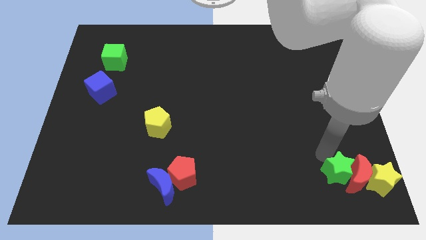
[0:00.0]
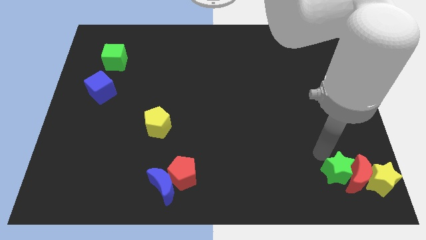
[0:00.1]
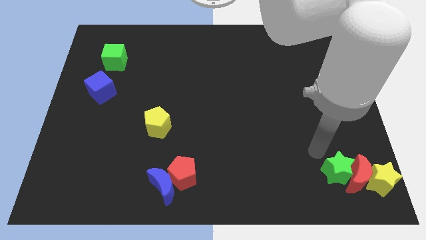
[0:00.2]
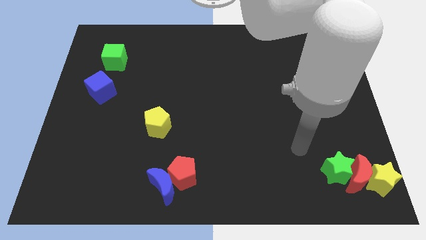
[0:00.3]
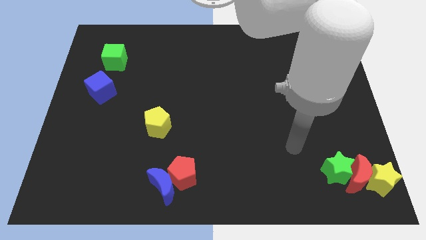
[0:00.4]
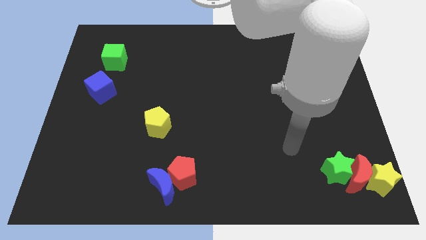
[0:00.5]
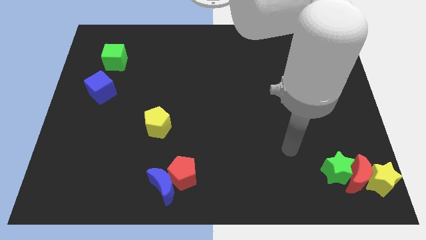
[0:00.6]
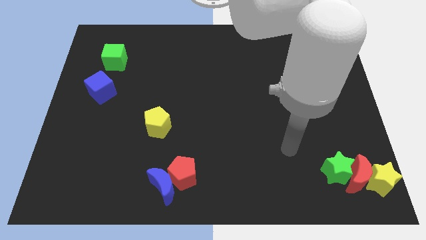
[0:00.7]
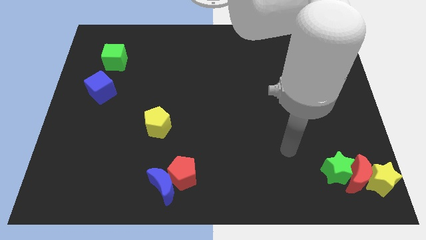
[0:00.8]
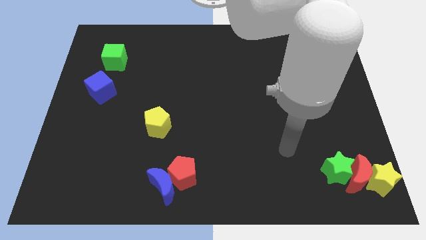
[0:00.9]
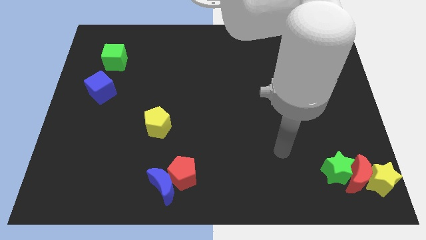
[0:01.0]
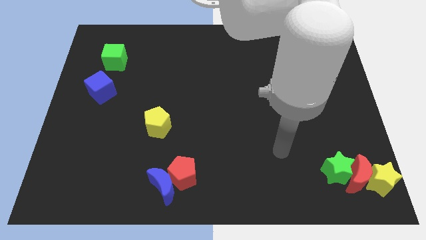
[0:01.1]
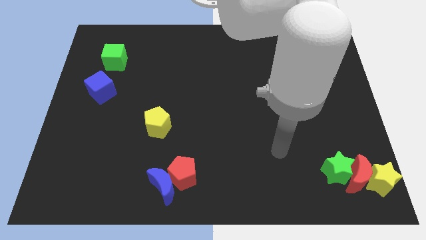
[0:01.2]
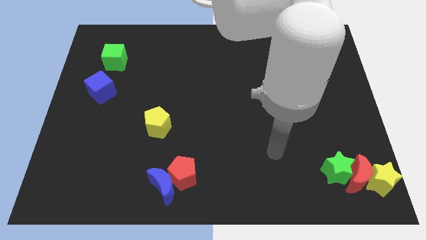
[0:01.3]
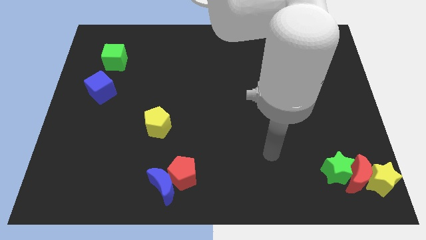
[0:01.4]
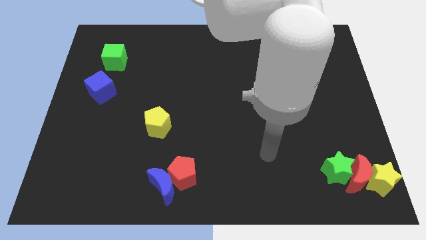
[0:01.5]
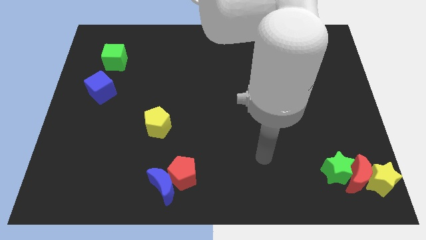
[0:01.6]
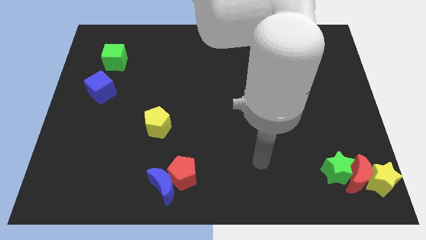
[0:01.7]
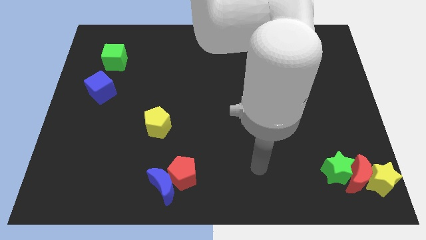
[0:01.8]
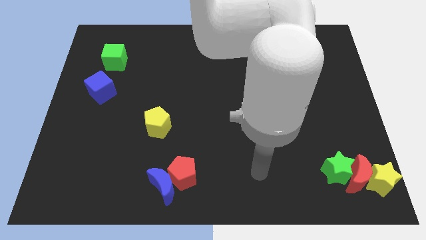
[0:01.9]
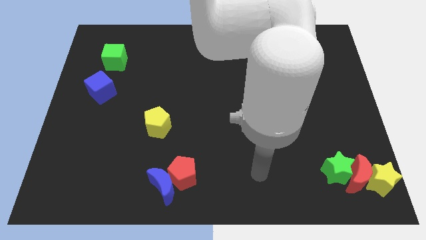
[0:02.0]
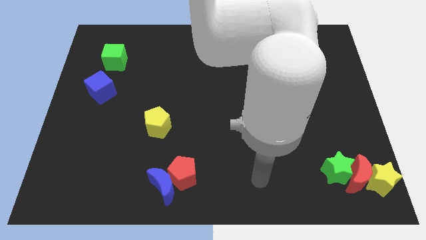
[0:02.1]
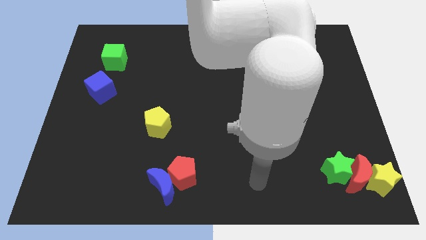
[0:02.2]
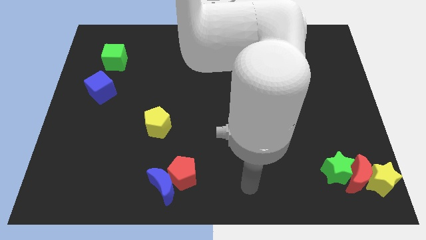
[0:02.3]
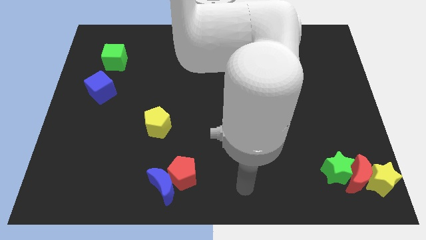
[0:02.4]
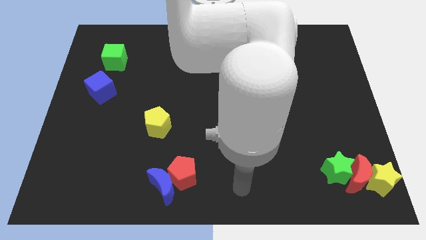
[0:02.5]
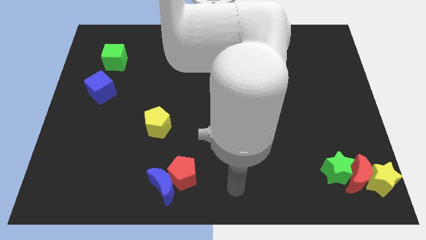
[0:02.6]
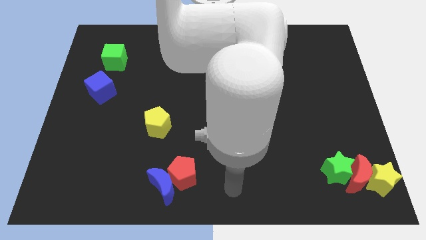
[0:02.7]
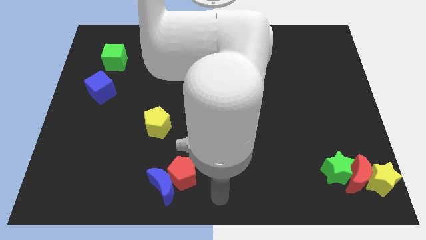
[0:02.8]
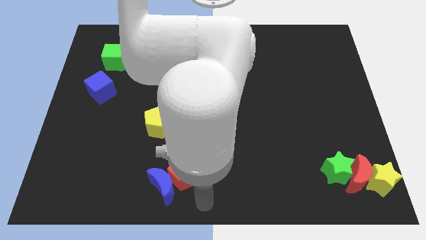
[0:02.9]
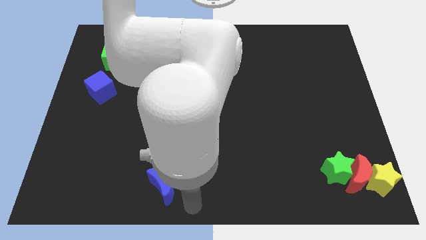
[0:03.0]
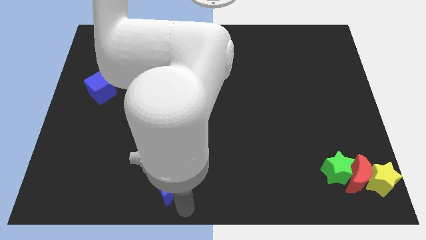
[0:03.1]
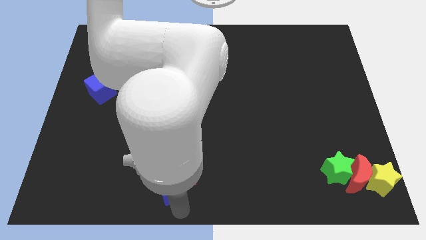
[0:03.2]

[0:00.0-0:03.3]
place your arm to the bottom of red pentagon

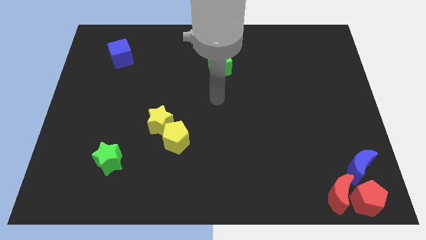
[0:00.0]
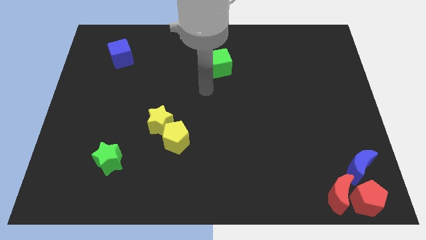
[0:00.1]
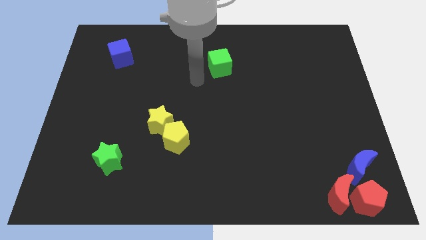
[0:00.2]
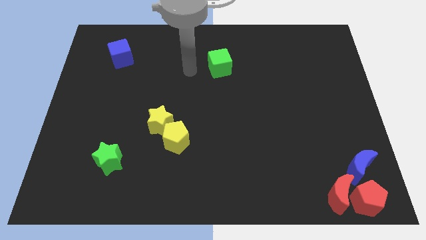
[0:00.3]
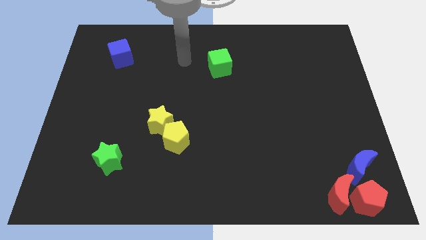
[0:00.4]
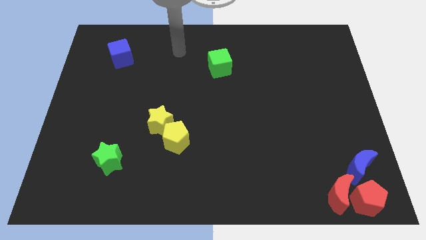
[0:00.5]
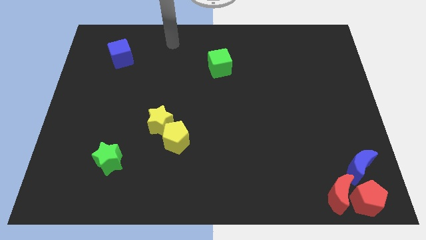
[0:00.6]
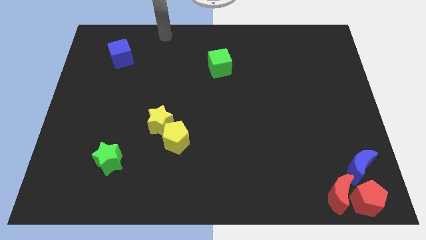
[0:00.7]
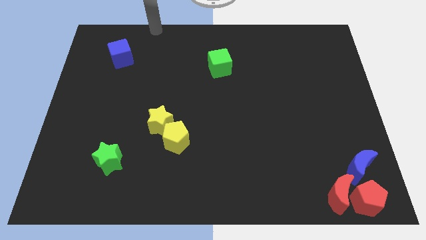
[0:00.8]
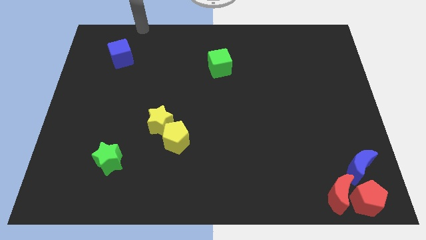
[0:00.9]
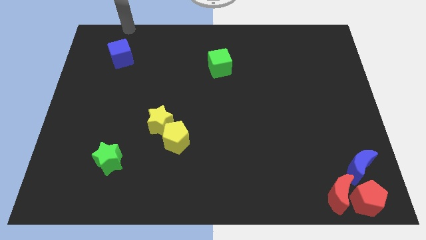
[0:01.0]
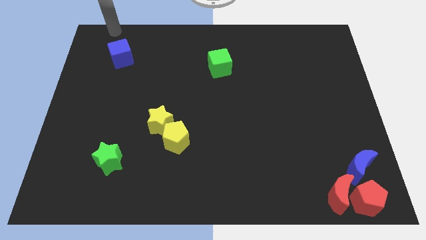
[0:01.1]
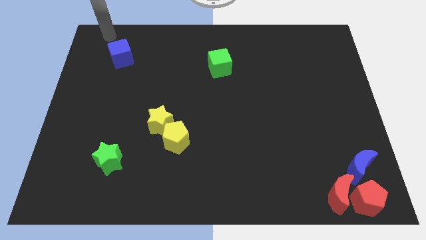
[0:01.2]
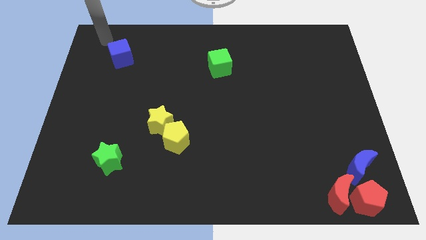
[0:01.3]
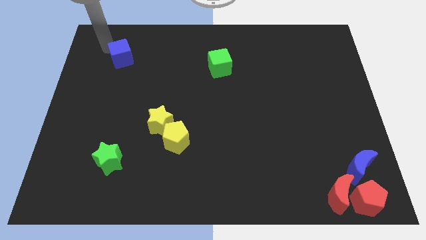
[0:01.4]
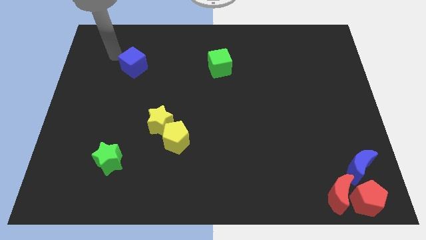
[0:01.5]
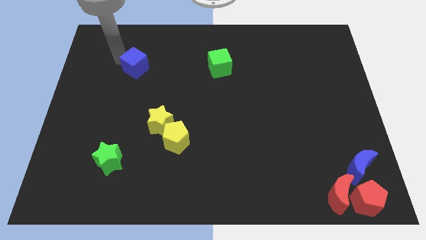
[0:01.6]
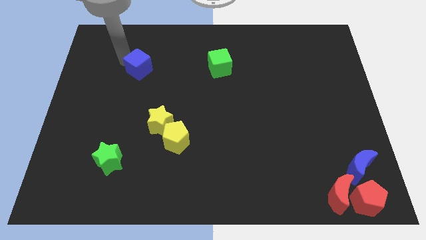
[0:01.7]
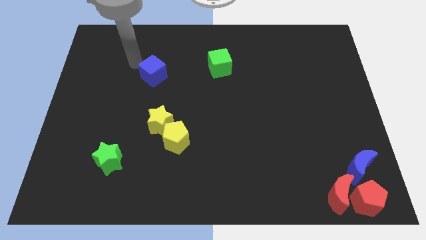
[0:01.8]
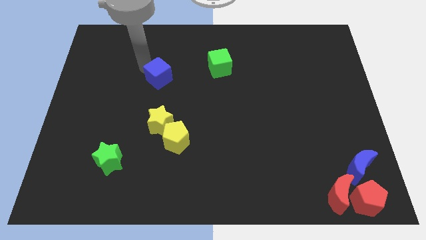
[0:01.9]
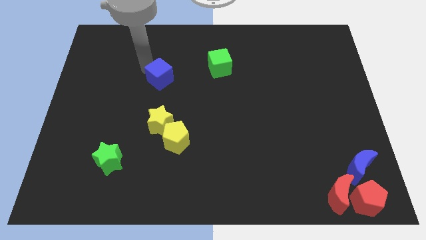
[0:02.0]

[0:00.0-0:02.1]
move arm towards the blue cube on the top left of the board

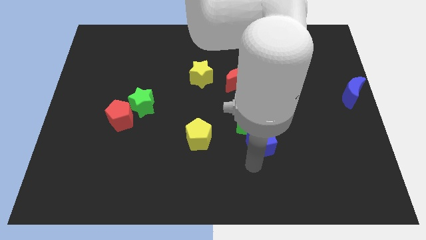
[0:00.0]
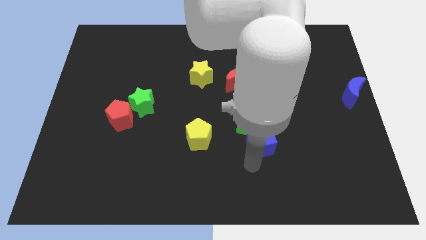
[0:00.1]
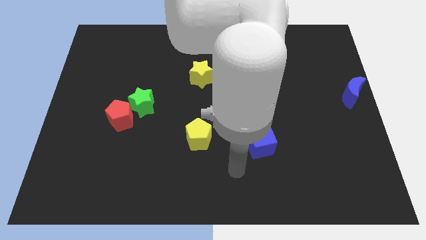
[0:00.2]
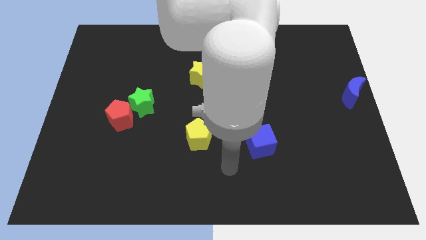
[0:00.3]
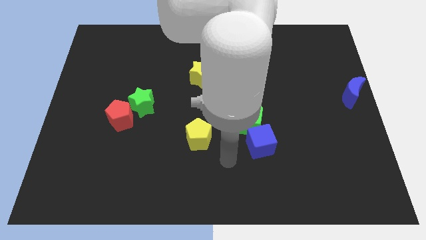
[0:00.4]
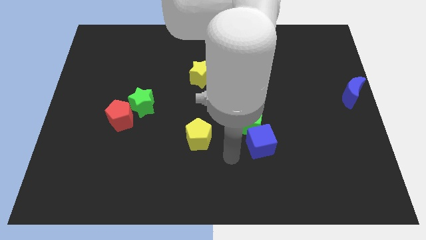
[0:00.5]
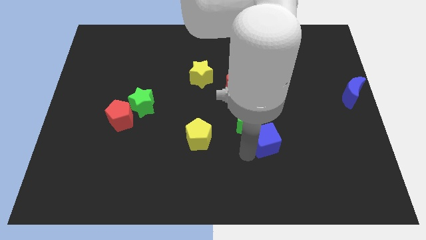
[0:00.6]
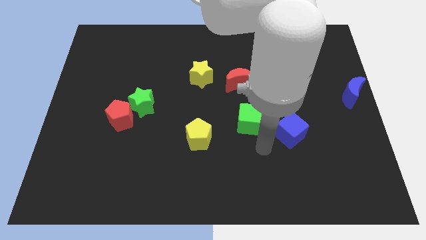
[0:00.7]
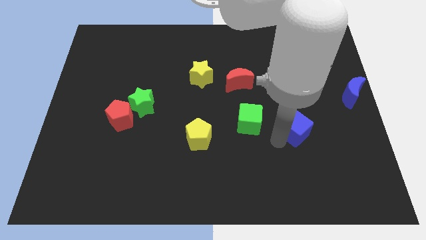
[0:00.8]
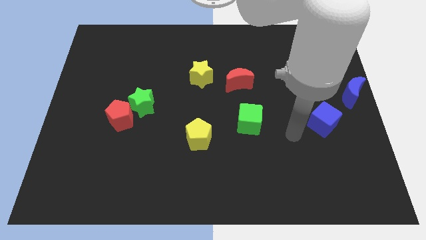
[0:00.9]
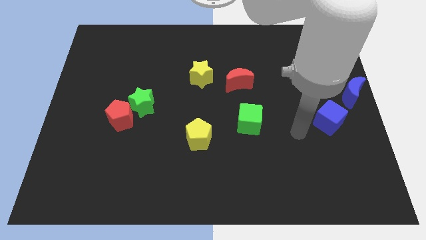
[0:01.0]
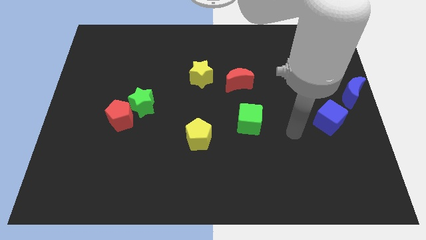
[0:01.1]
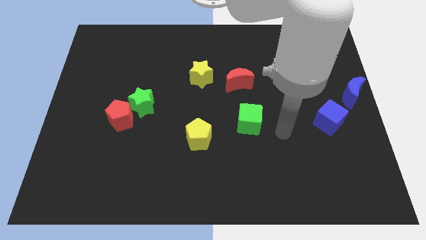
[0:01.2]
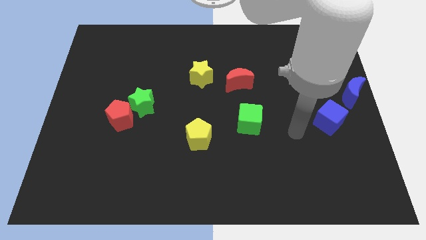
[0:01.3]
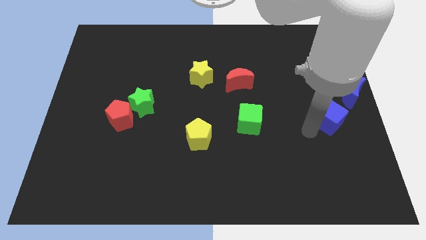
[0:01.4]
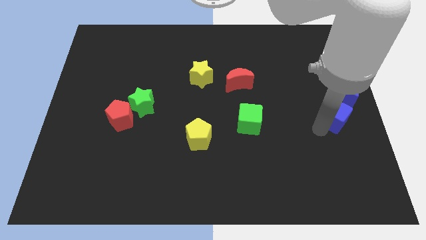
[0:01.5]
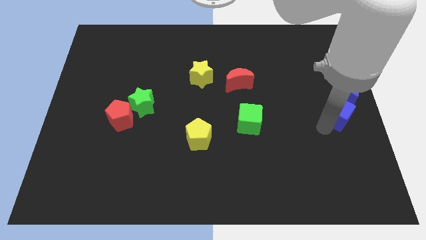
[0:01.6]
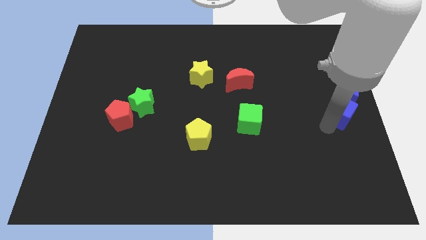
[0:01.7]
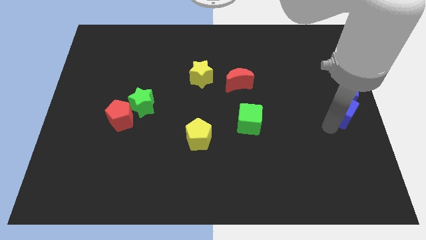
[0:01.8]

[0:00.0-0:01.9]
move the blue cube close to the blue crescent

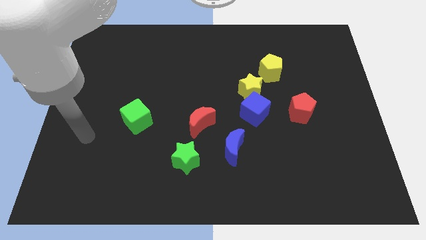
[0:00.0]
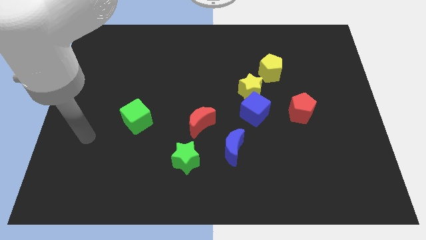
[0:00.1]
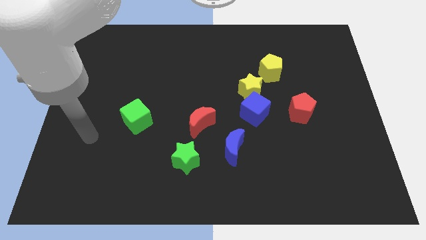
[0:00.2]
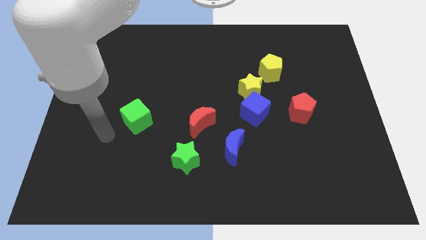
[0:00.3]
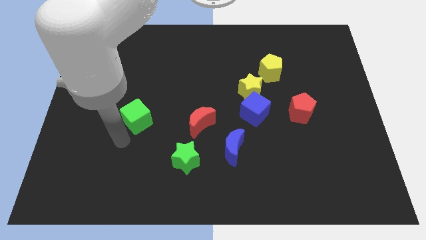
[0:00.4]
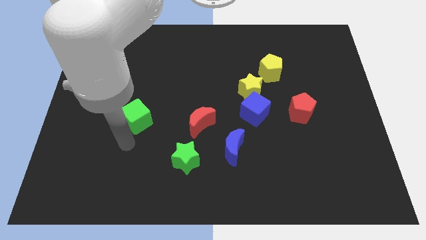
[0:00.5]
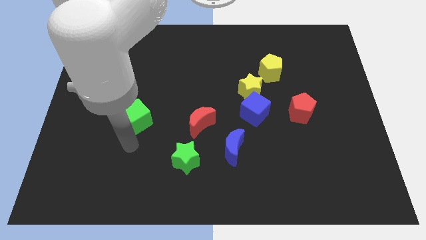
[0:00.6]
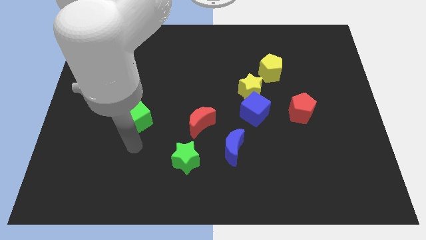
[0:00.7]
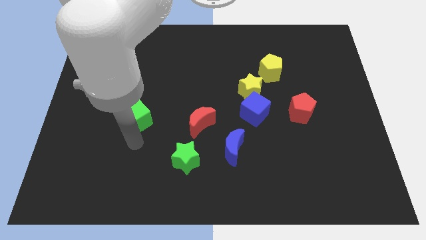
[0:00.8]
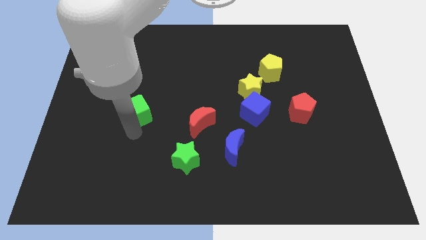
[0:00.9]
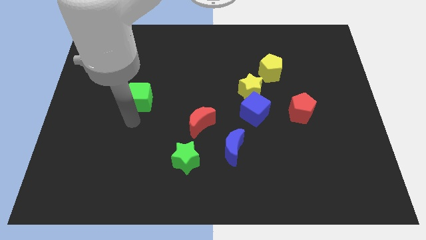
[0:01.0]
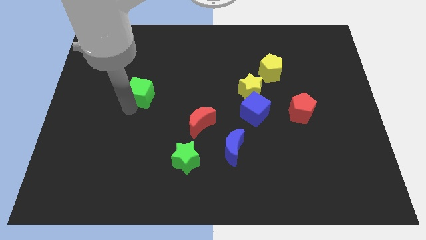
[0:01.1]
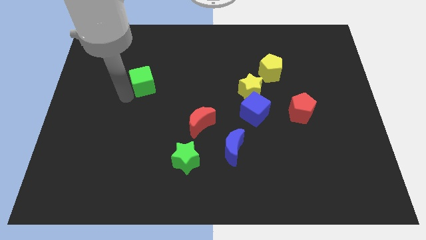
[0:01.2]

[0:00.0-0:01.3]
move the green cube horizontally to the left side of the yellow star
